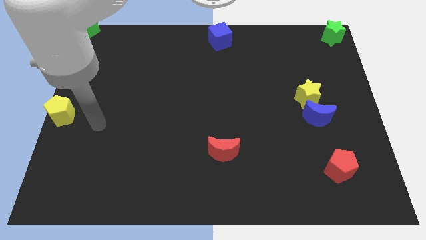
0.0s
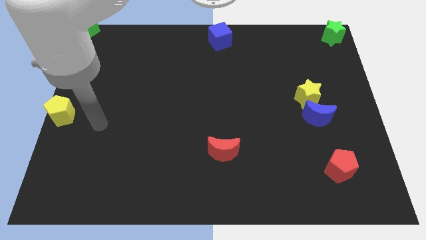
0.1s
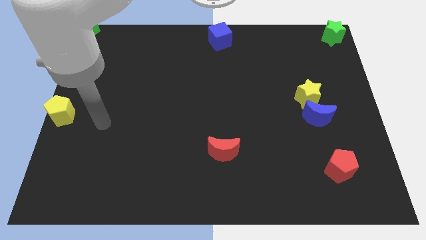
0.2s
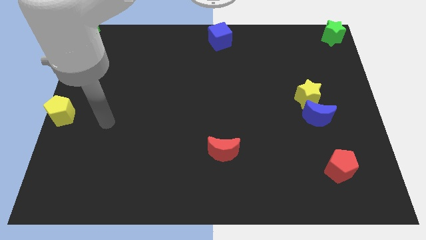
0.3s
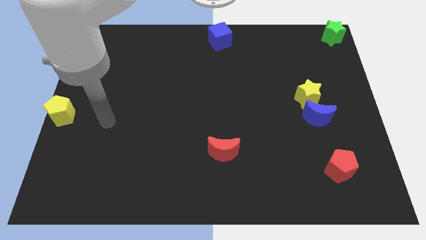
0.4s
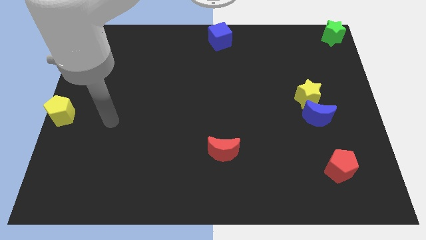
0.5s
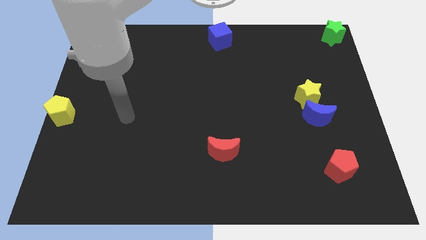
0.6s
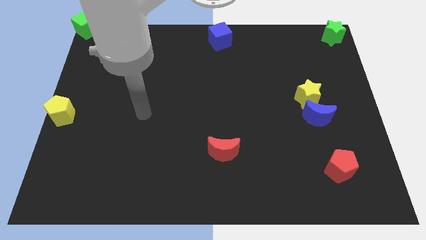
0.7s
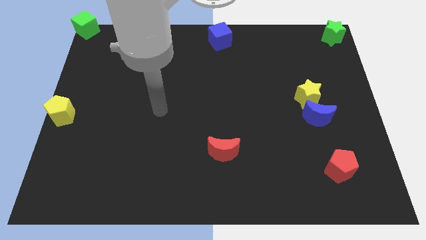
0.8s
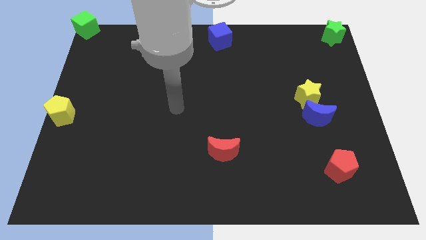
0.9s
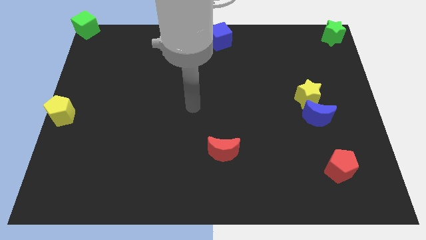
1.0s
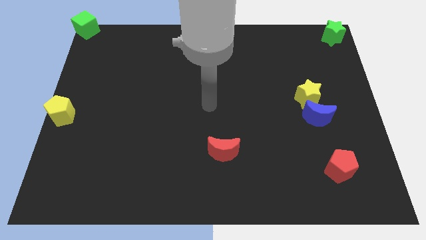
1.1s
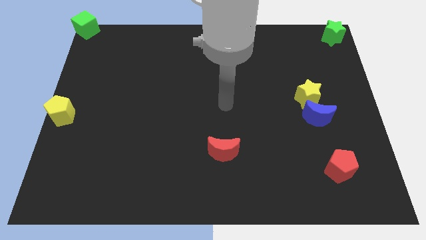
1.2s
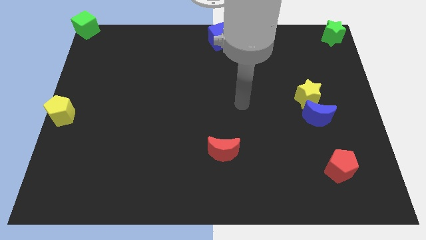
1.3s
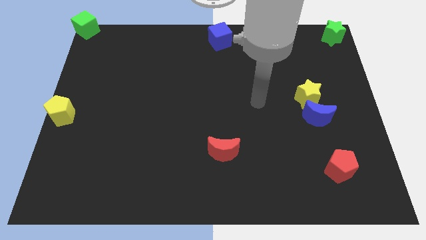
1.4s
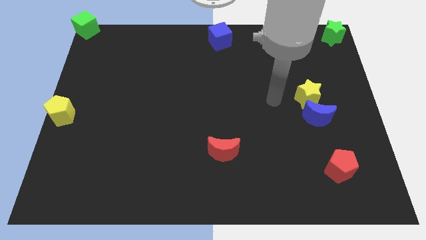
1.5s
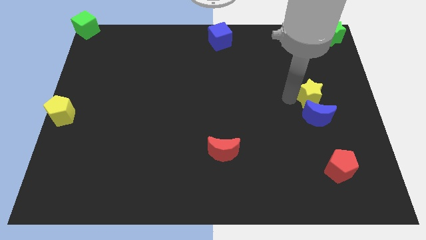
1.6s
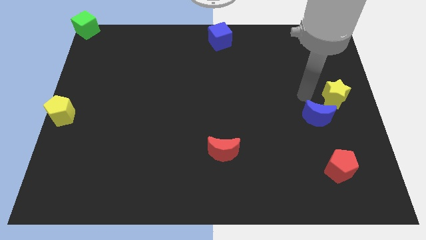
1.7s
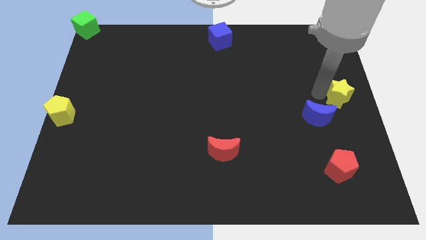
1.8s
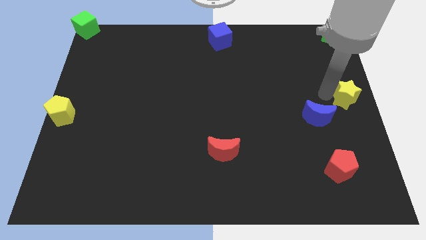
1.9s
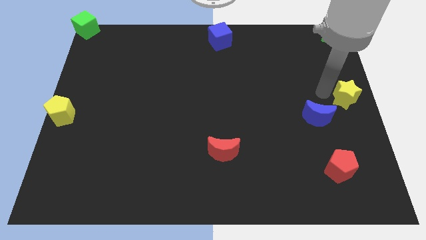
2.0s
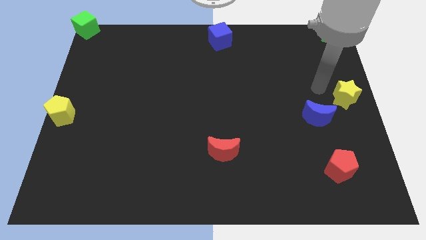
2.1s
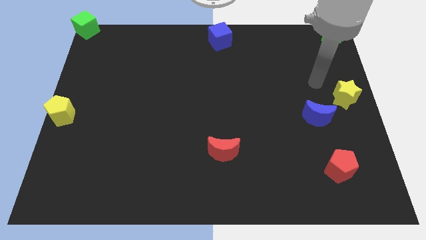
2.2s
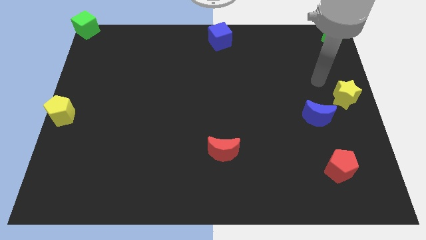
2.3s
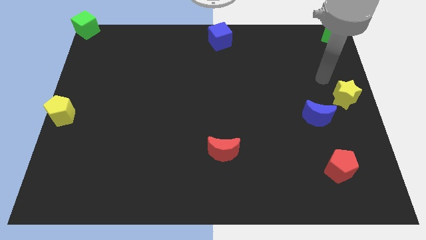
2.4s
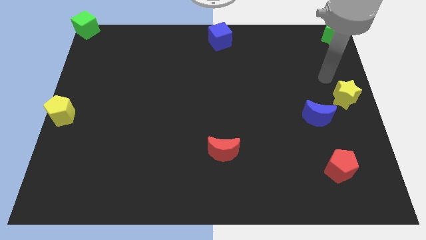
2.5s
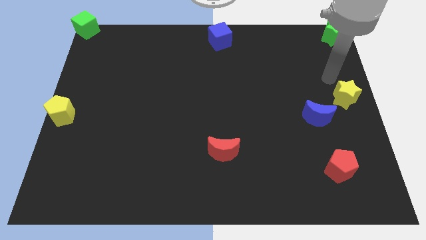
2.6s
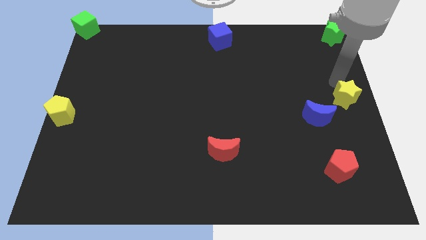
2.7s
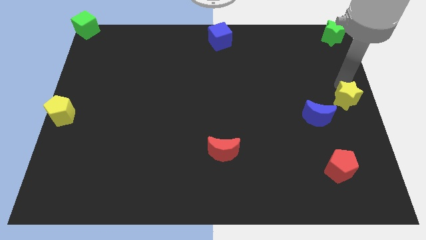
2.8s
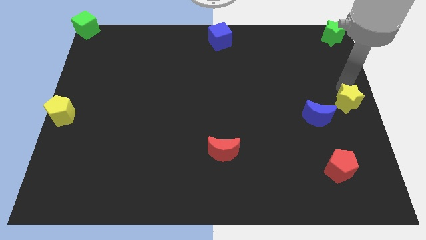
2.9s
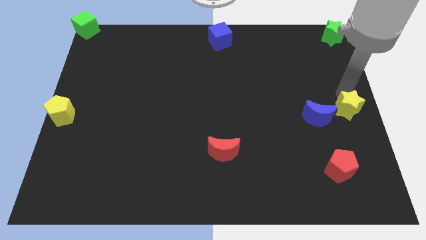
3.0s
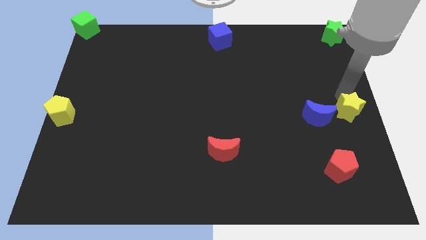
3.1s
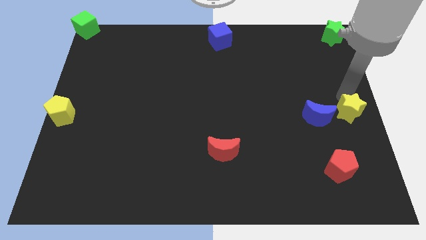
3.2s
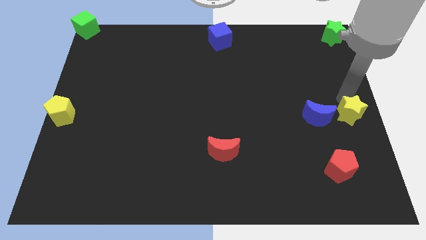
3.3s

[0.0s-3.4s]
move the yellow star right of the blue moon

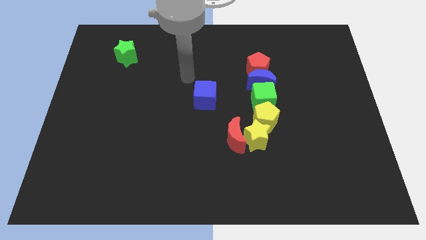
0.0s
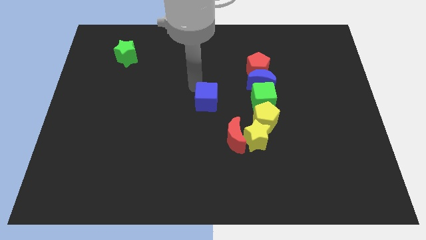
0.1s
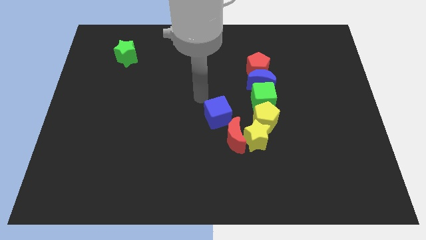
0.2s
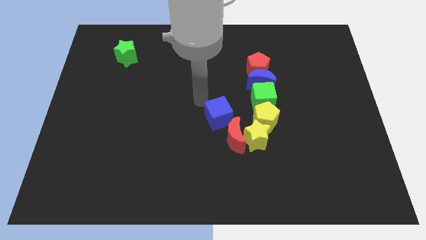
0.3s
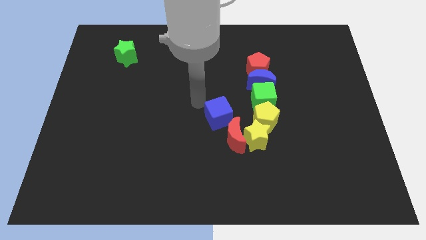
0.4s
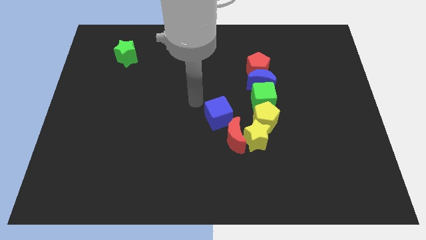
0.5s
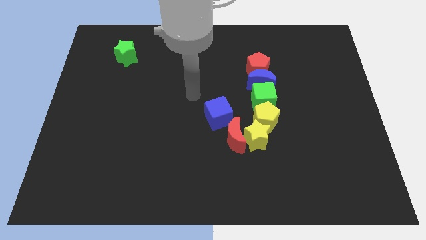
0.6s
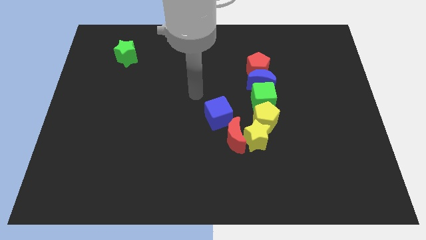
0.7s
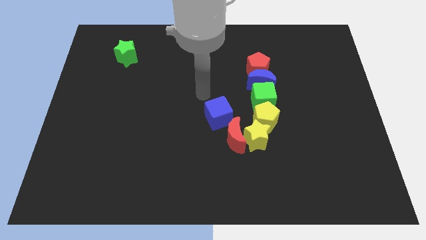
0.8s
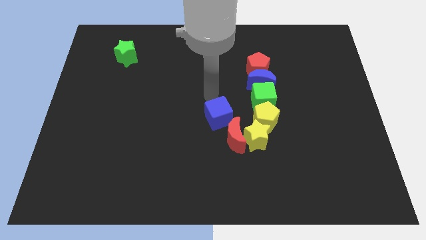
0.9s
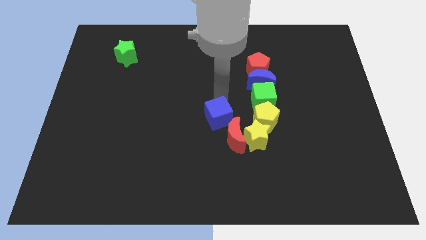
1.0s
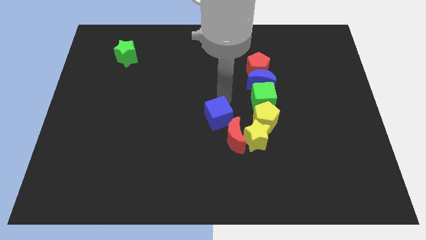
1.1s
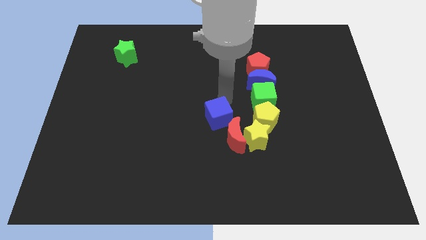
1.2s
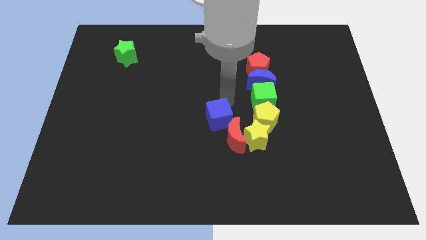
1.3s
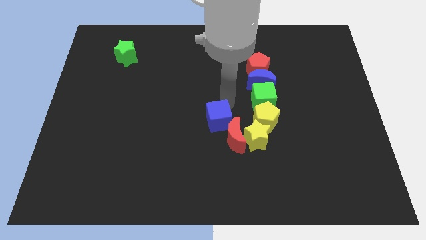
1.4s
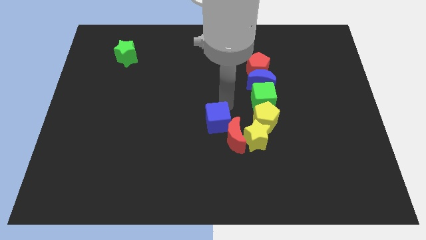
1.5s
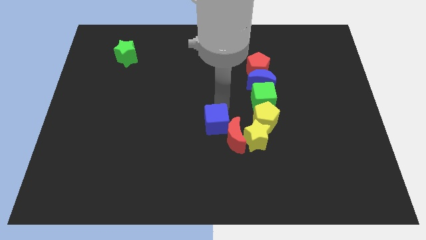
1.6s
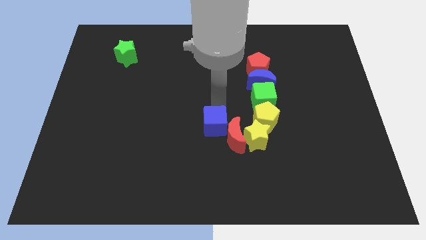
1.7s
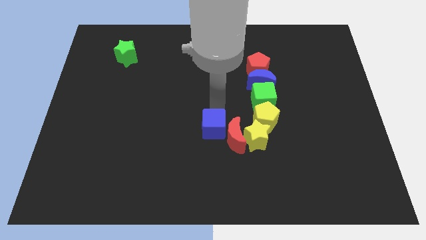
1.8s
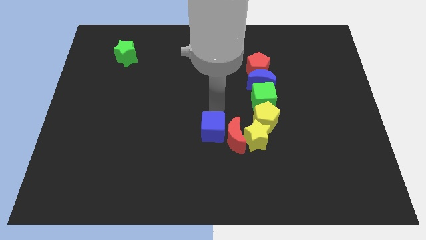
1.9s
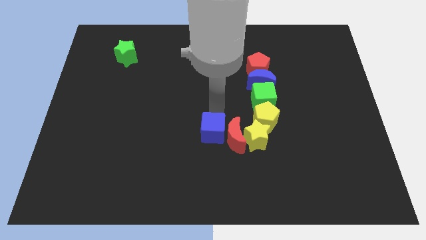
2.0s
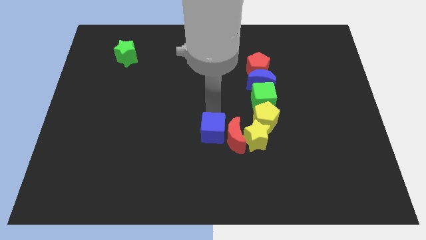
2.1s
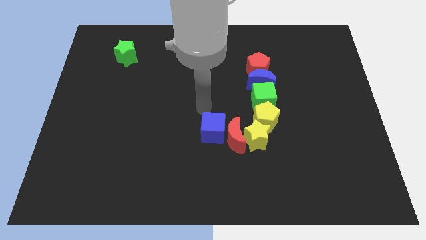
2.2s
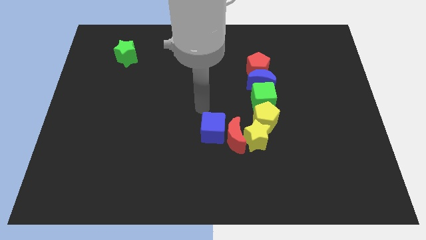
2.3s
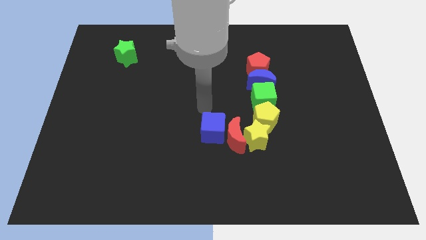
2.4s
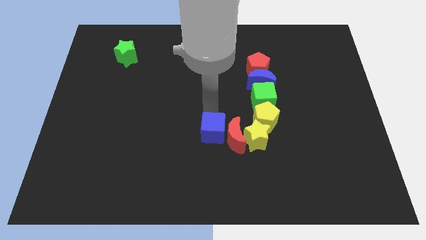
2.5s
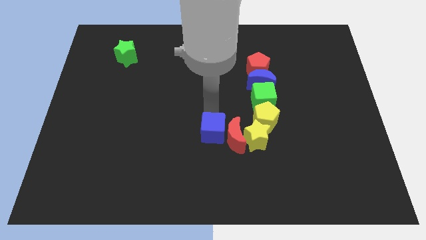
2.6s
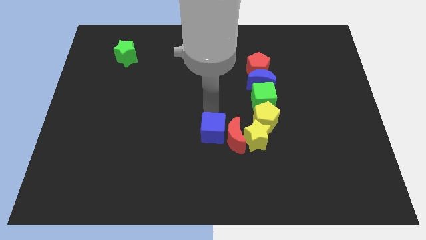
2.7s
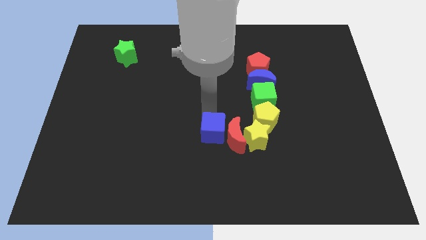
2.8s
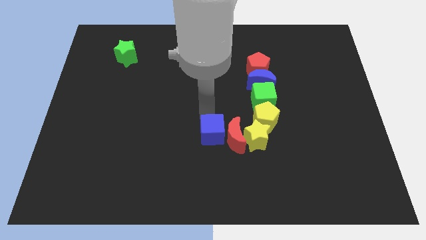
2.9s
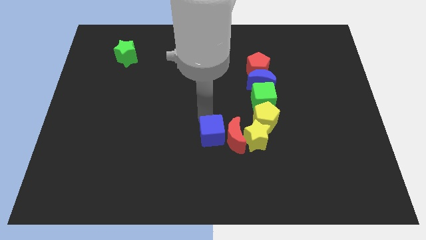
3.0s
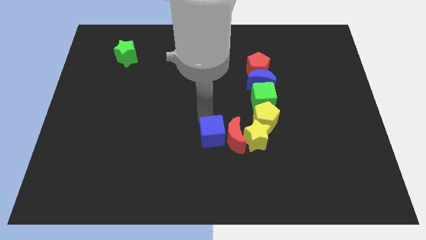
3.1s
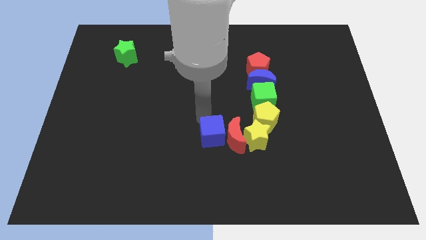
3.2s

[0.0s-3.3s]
slide the blue cube to the left side of the red moon

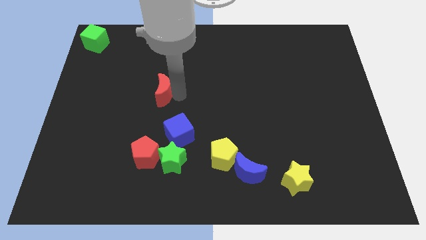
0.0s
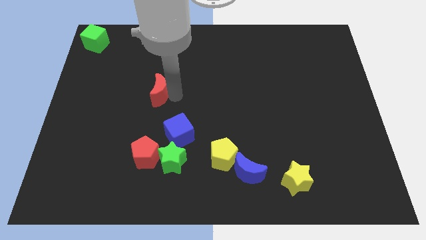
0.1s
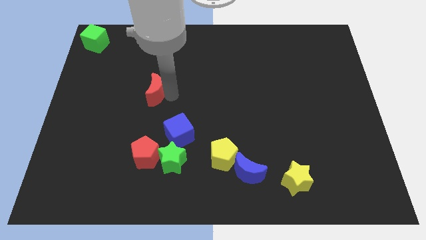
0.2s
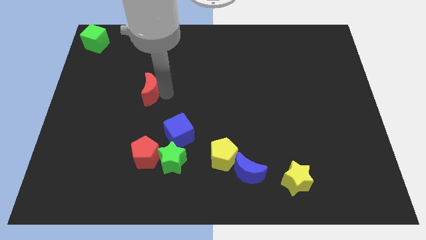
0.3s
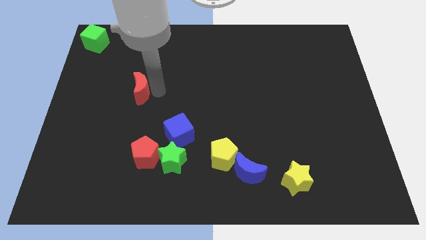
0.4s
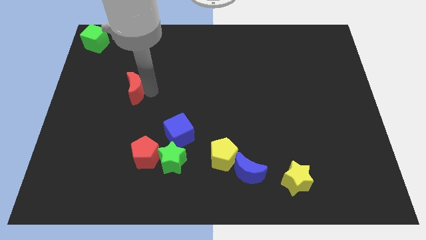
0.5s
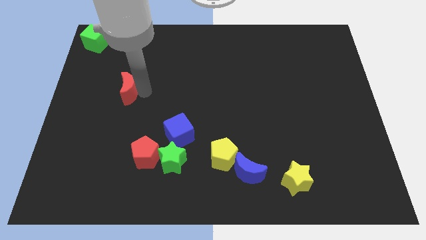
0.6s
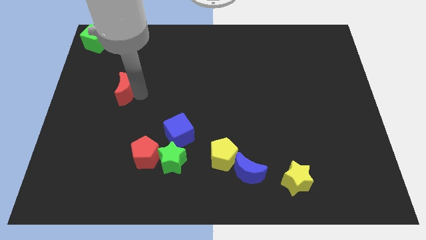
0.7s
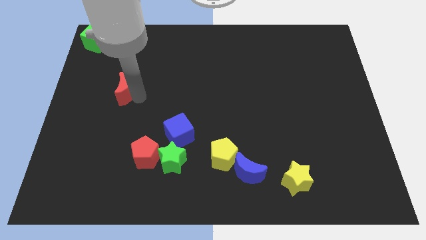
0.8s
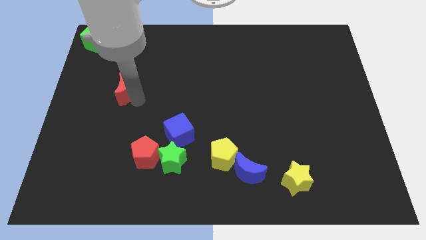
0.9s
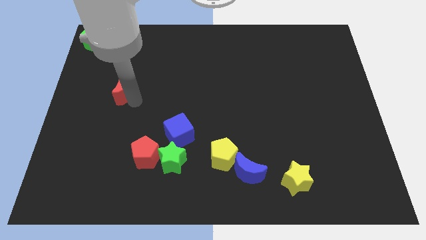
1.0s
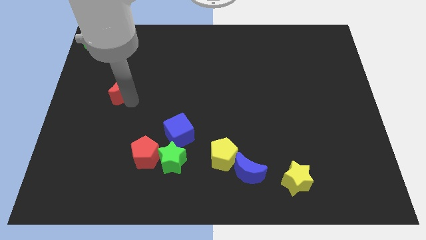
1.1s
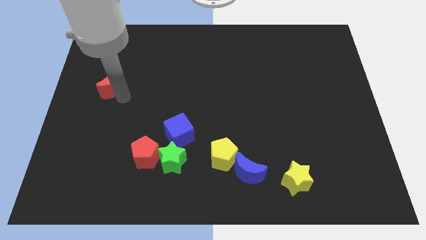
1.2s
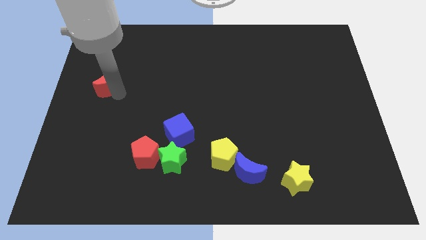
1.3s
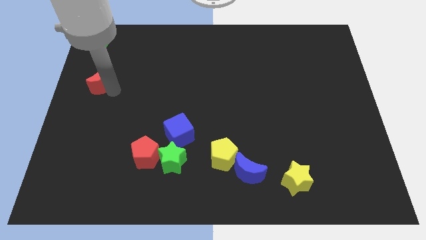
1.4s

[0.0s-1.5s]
move the red moon diagonally top left to the blue cube

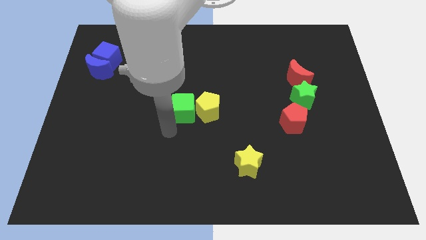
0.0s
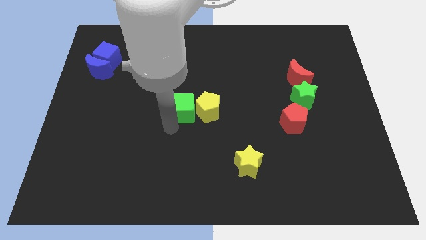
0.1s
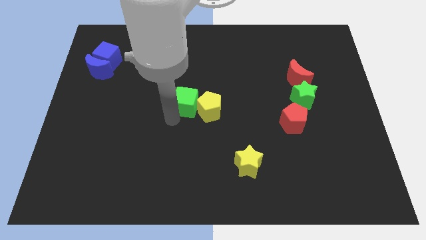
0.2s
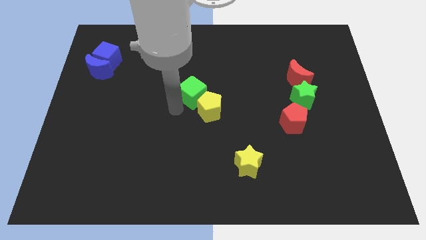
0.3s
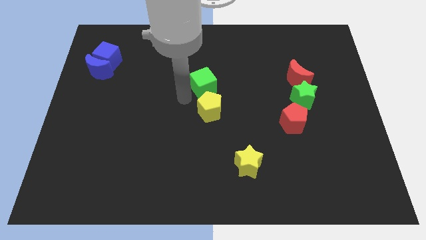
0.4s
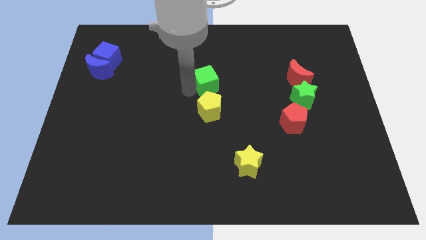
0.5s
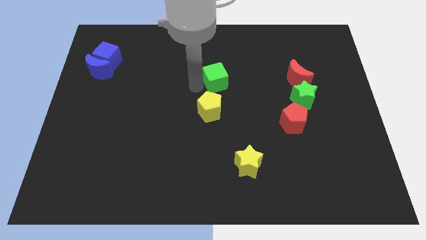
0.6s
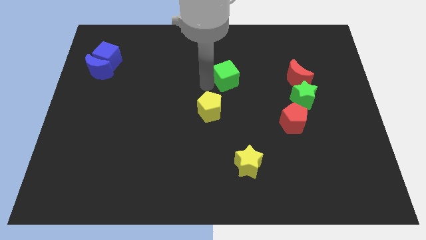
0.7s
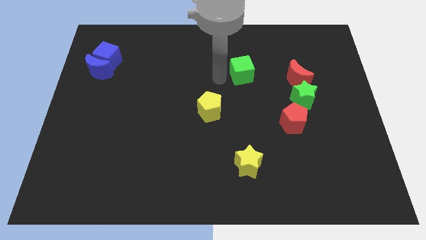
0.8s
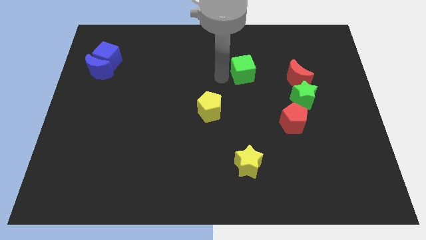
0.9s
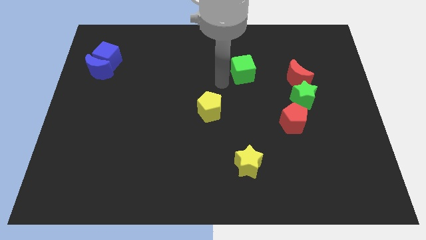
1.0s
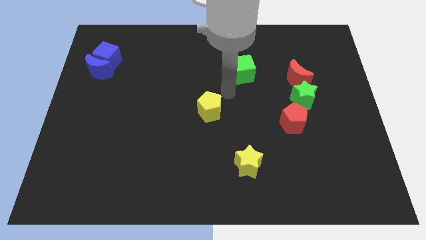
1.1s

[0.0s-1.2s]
separate green cube from the yellow pentagon
